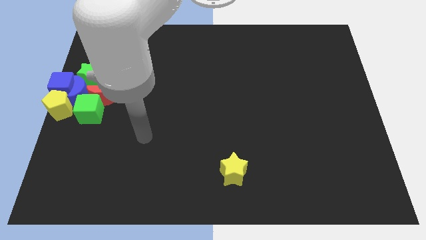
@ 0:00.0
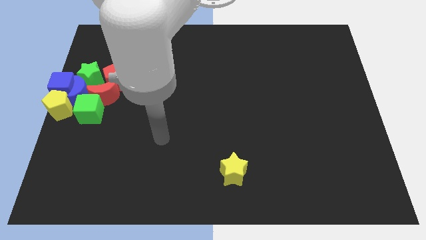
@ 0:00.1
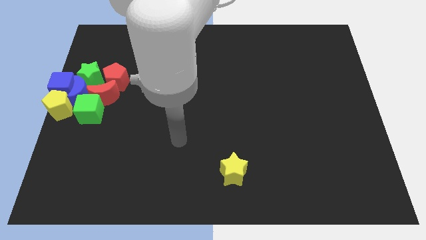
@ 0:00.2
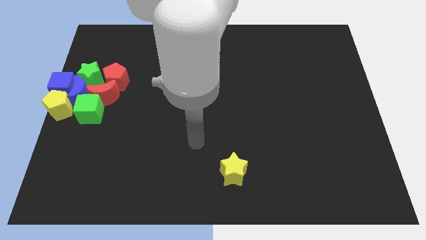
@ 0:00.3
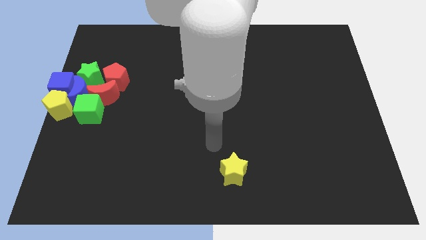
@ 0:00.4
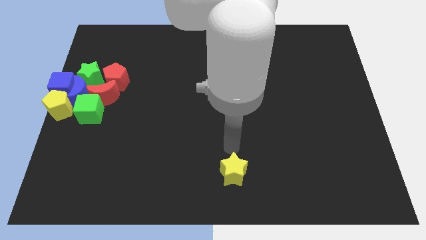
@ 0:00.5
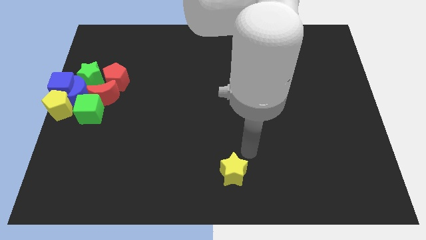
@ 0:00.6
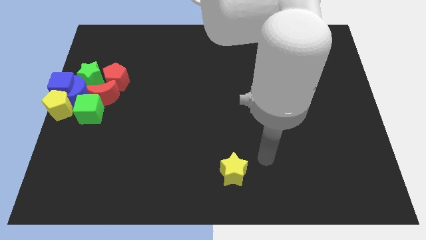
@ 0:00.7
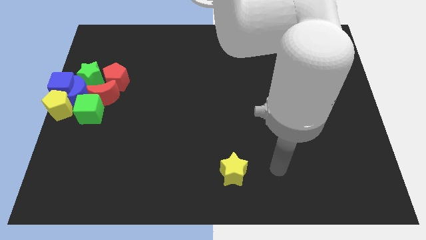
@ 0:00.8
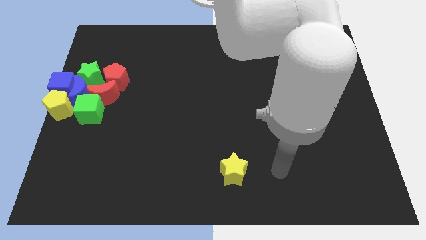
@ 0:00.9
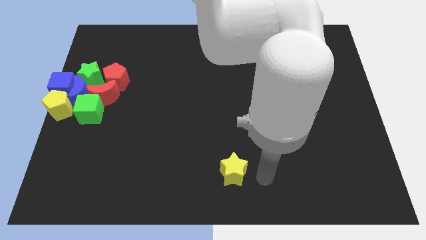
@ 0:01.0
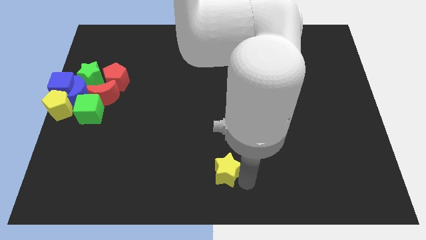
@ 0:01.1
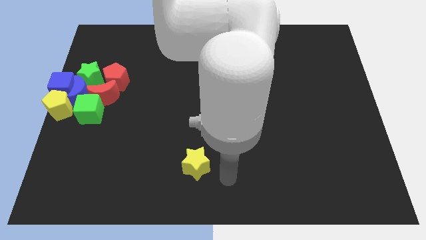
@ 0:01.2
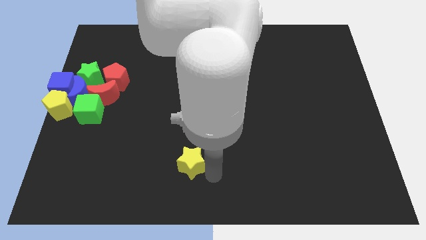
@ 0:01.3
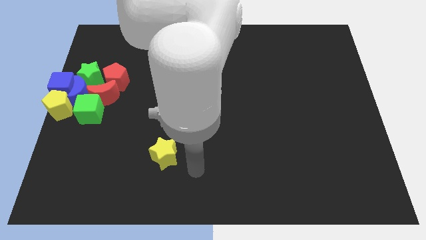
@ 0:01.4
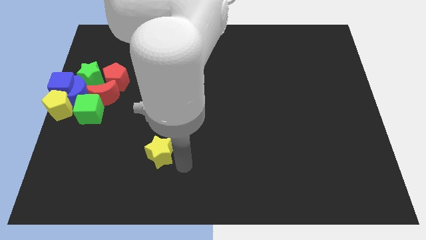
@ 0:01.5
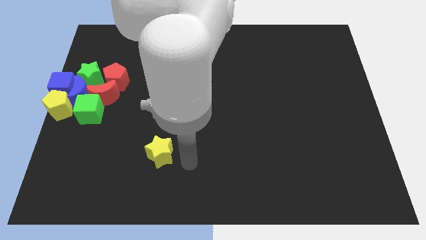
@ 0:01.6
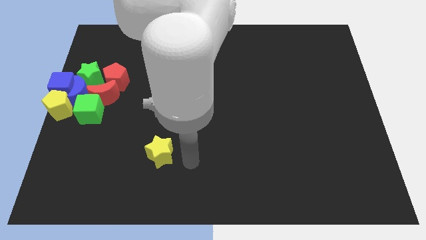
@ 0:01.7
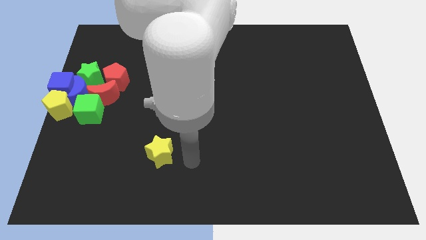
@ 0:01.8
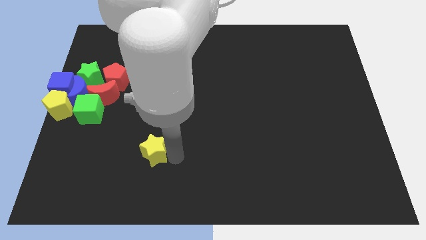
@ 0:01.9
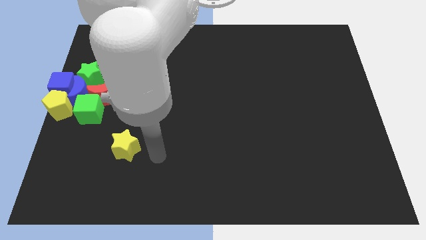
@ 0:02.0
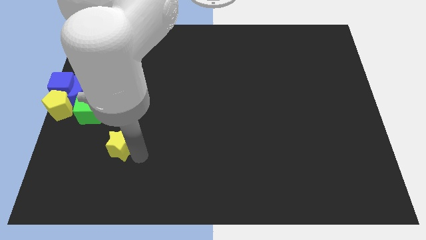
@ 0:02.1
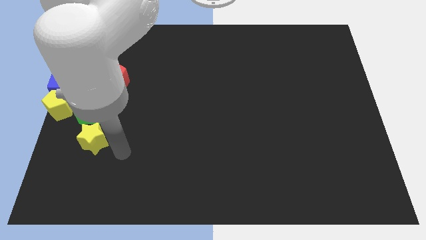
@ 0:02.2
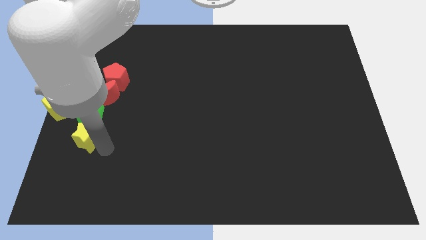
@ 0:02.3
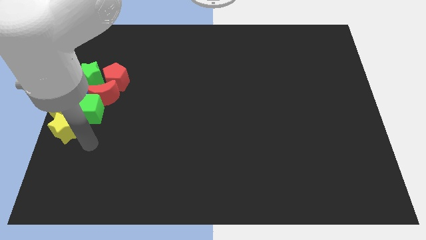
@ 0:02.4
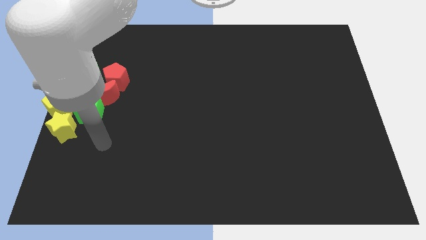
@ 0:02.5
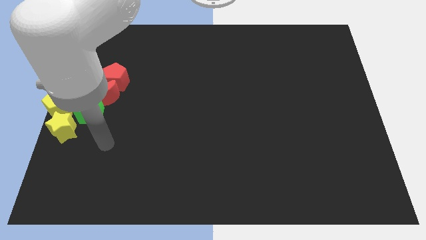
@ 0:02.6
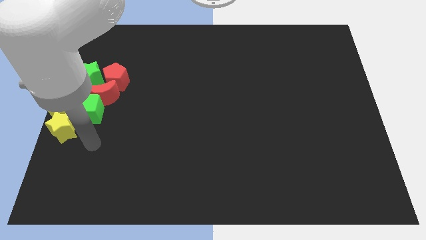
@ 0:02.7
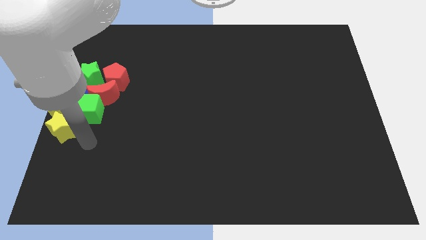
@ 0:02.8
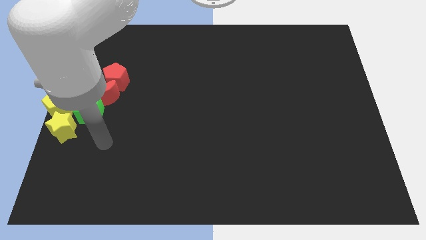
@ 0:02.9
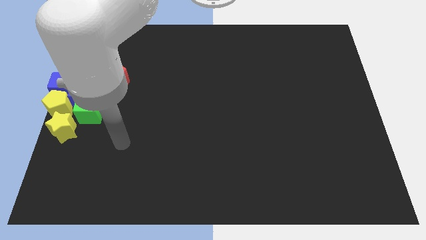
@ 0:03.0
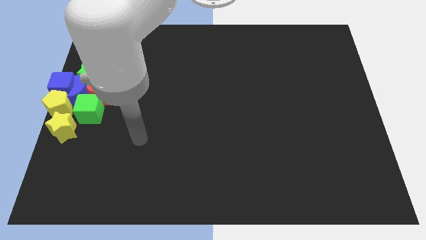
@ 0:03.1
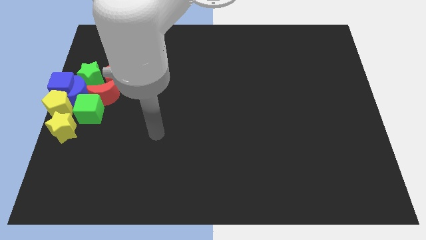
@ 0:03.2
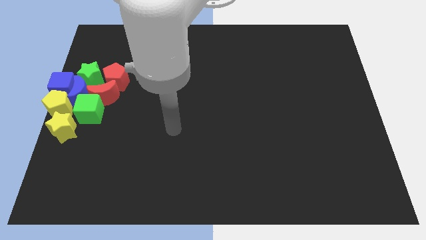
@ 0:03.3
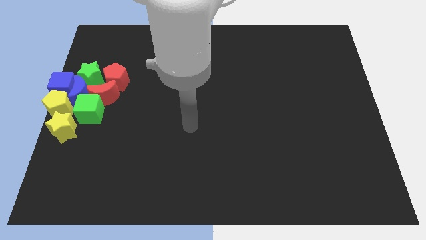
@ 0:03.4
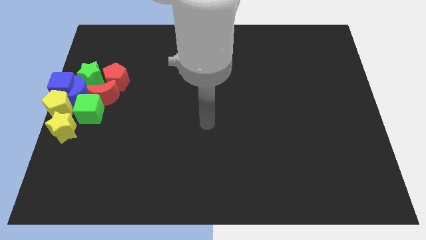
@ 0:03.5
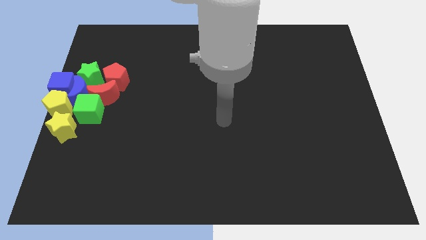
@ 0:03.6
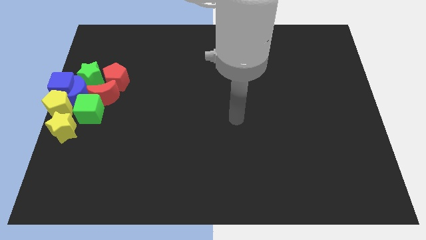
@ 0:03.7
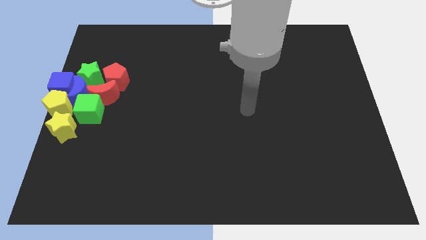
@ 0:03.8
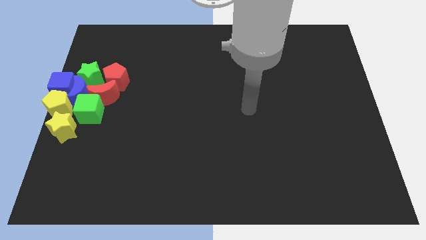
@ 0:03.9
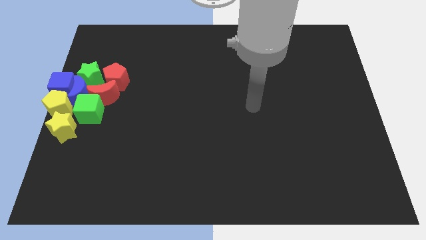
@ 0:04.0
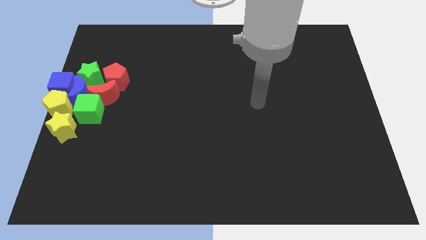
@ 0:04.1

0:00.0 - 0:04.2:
place yellow star to the bottom of yellow pentagon

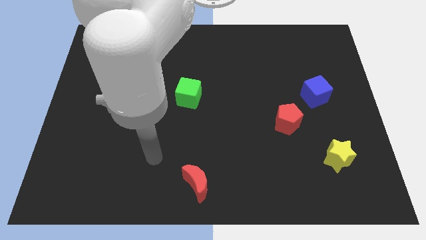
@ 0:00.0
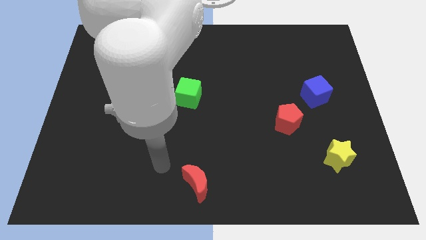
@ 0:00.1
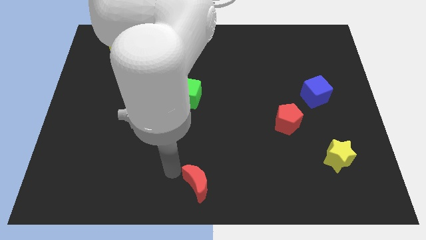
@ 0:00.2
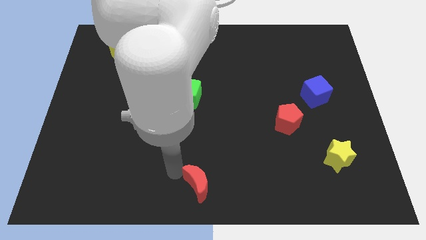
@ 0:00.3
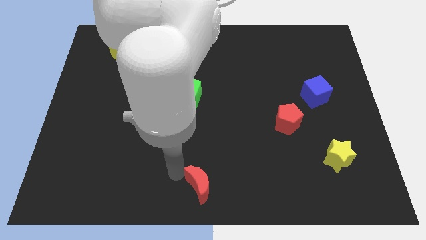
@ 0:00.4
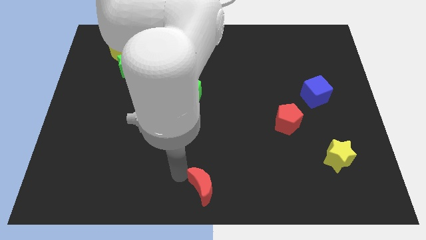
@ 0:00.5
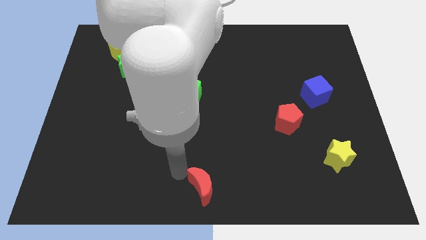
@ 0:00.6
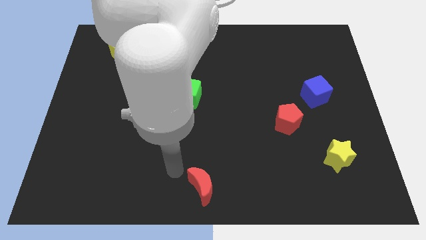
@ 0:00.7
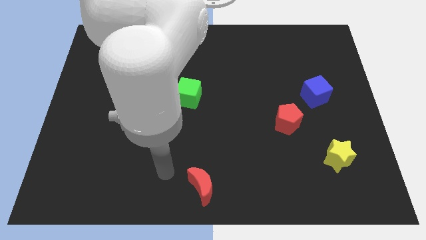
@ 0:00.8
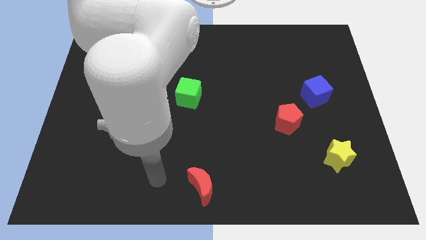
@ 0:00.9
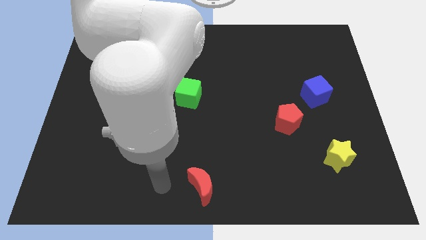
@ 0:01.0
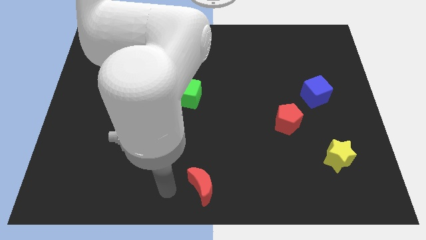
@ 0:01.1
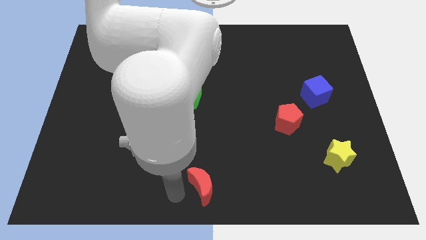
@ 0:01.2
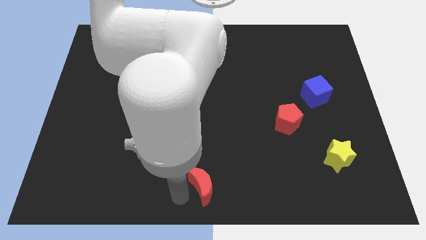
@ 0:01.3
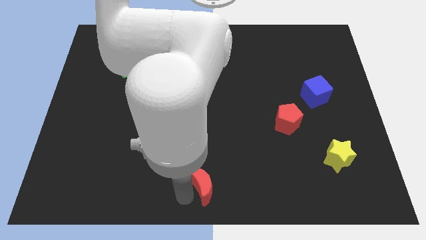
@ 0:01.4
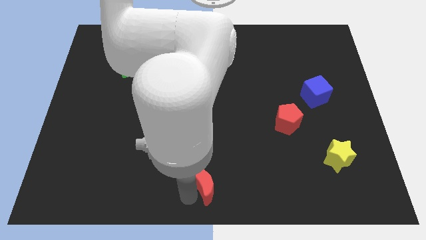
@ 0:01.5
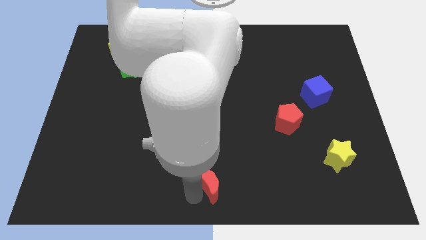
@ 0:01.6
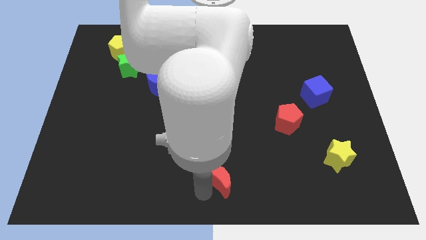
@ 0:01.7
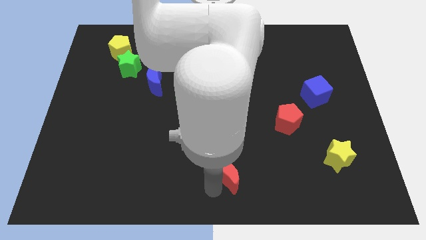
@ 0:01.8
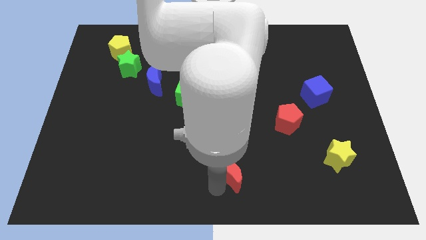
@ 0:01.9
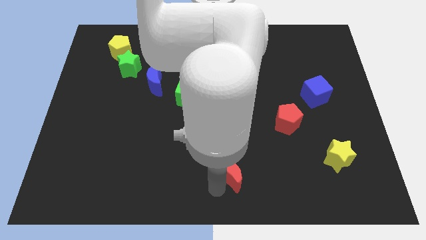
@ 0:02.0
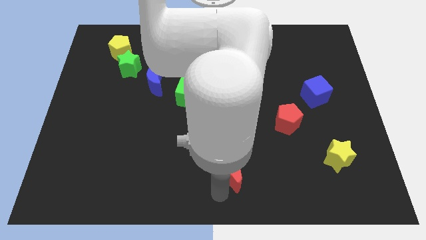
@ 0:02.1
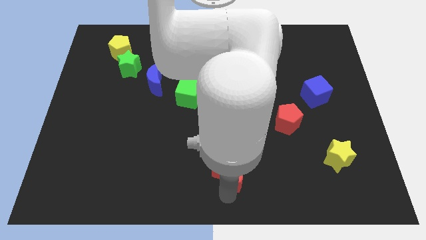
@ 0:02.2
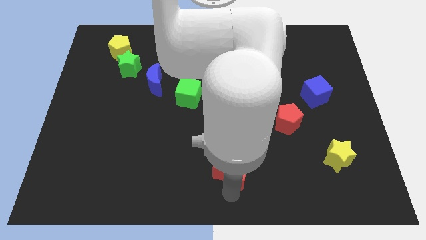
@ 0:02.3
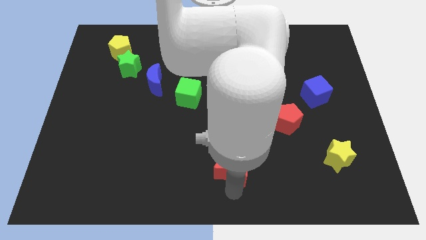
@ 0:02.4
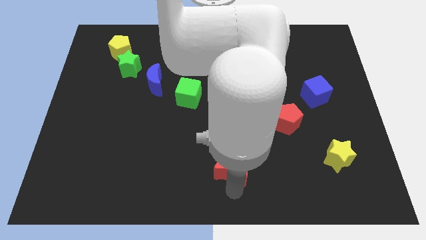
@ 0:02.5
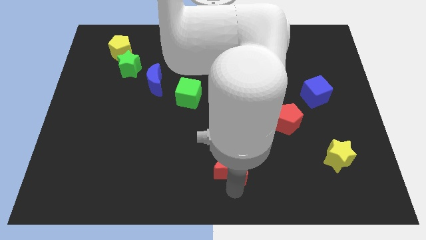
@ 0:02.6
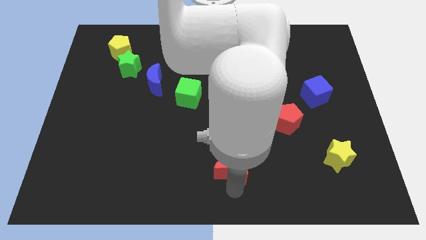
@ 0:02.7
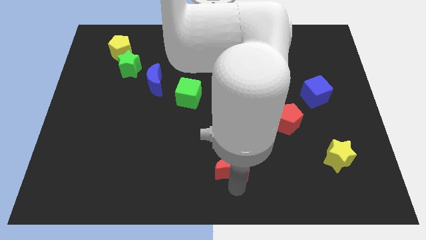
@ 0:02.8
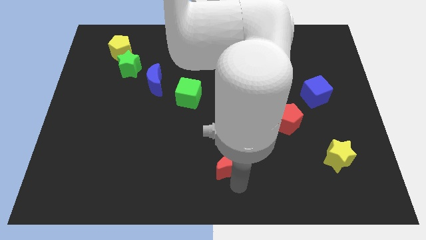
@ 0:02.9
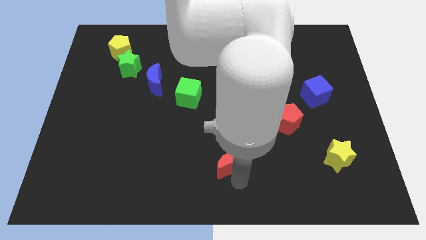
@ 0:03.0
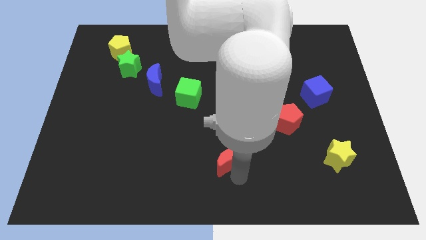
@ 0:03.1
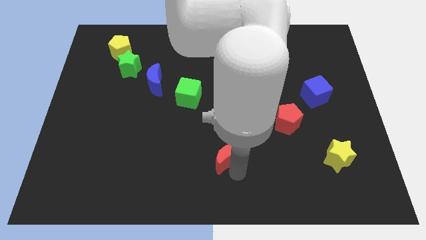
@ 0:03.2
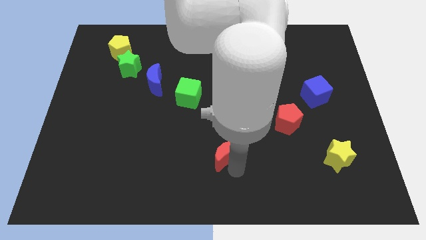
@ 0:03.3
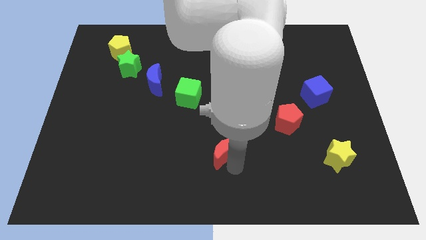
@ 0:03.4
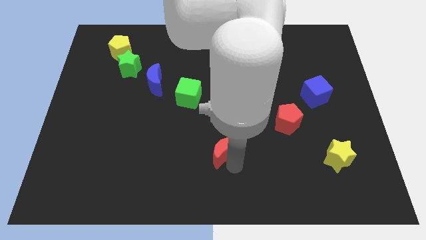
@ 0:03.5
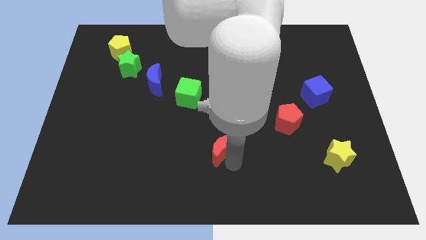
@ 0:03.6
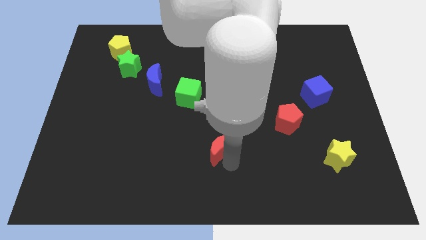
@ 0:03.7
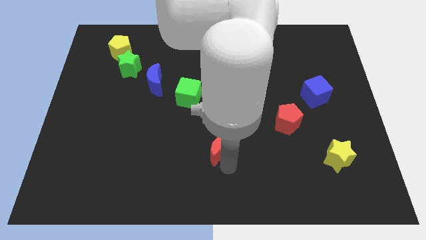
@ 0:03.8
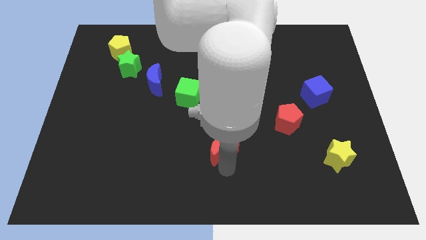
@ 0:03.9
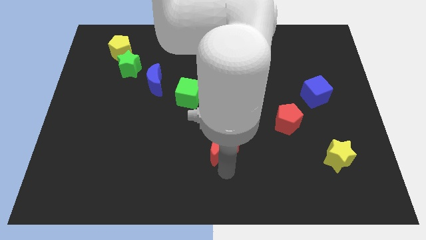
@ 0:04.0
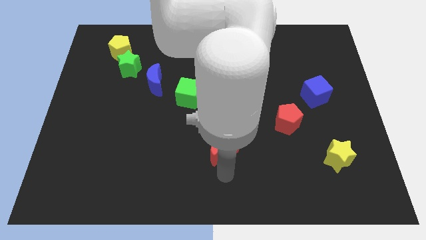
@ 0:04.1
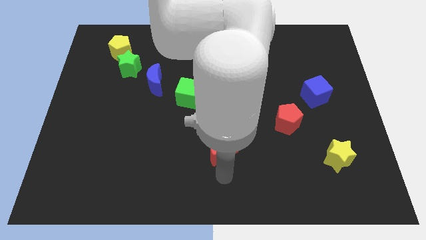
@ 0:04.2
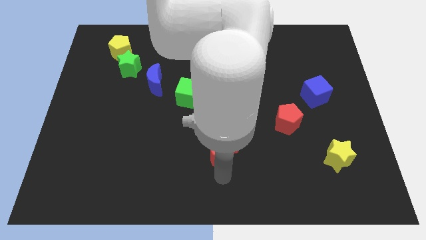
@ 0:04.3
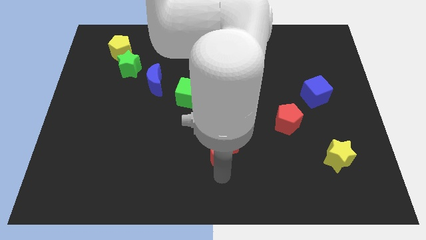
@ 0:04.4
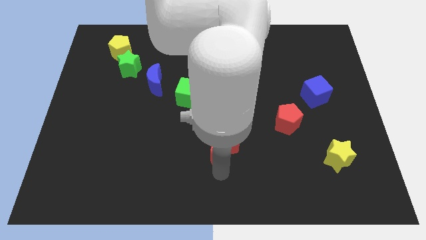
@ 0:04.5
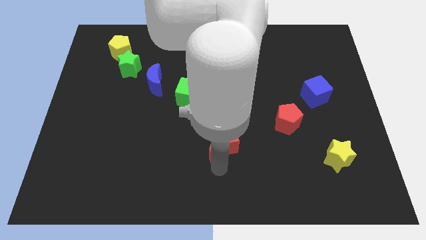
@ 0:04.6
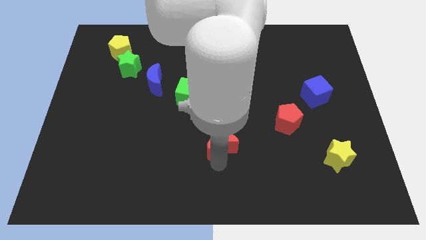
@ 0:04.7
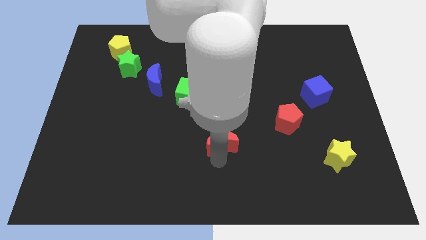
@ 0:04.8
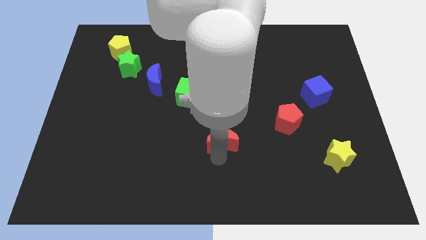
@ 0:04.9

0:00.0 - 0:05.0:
place the red moon to the left of the yellow star
